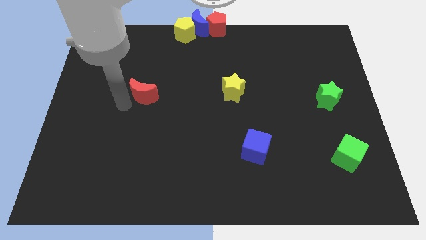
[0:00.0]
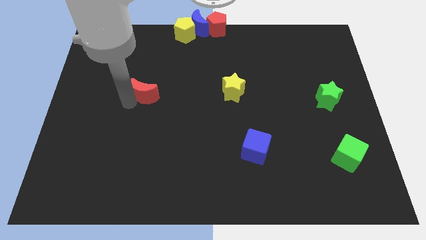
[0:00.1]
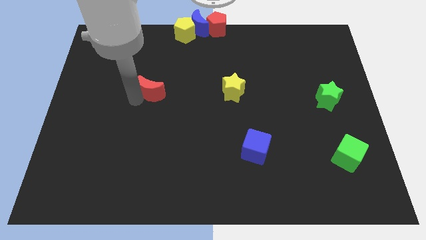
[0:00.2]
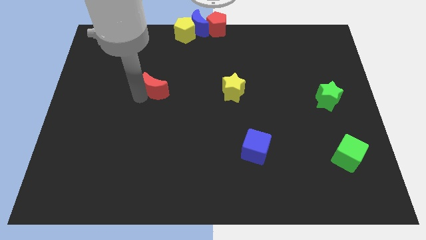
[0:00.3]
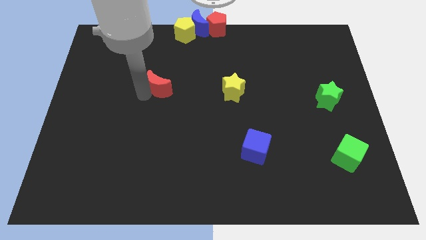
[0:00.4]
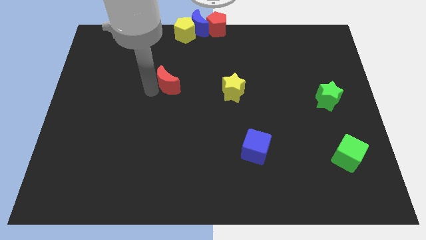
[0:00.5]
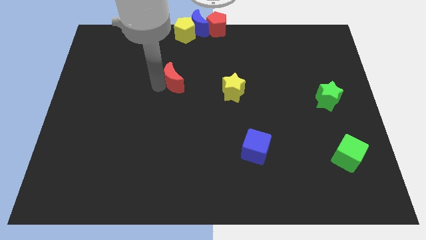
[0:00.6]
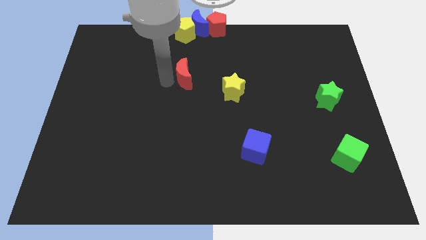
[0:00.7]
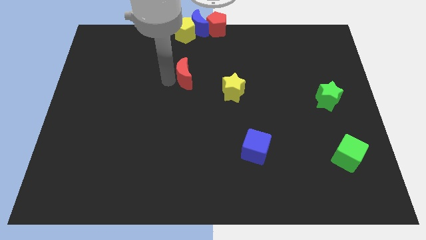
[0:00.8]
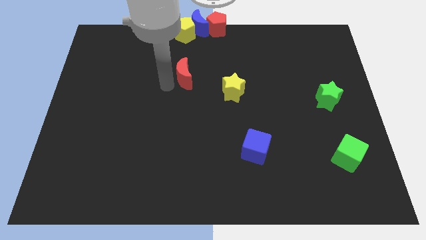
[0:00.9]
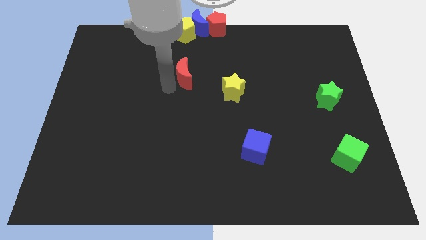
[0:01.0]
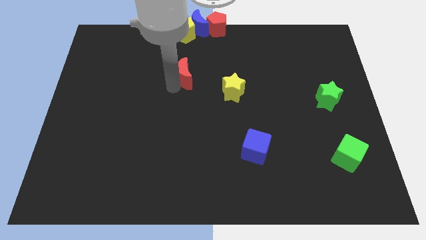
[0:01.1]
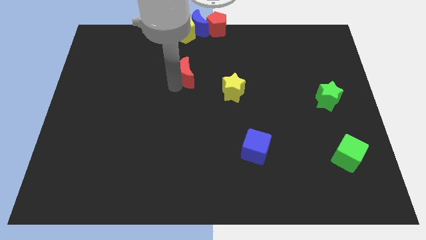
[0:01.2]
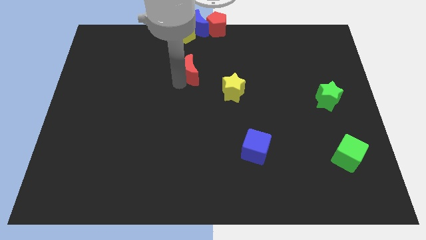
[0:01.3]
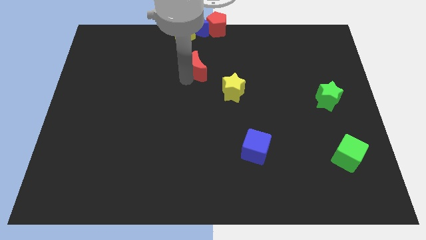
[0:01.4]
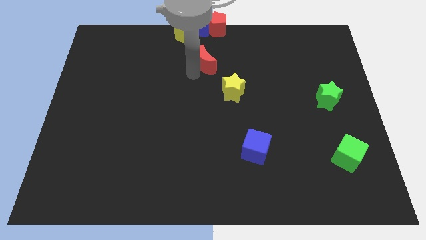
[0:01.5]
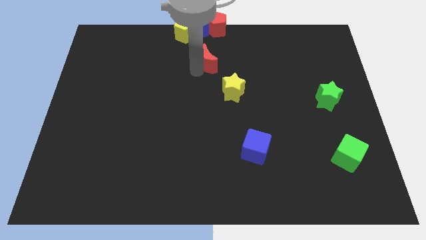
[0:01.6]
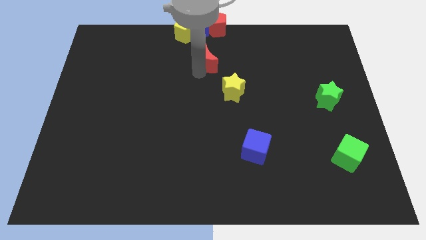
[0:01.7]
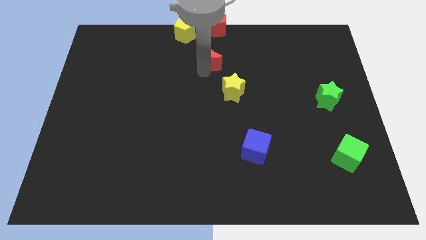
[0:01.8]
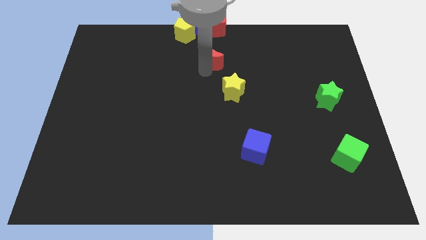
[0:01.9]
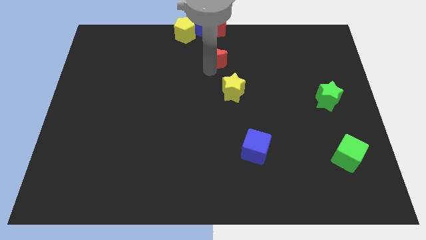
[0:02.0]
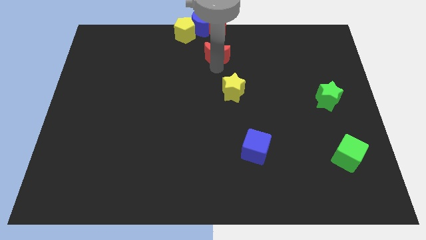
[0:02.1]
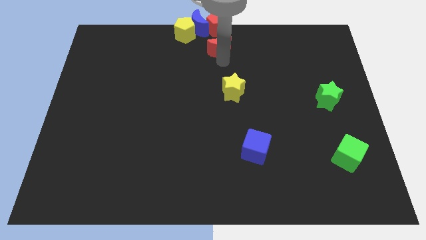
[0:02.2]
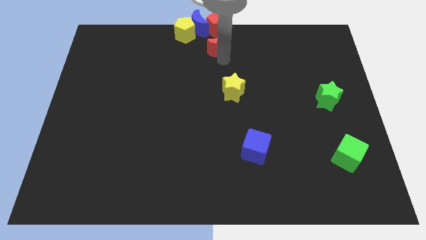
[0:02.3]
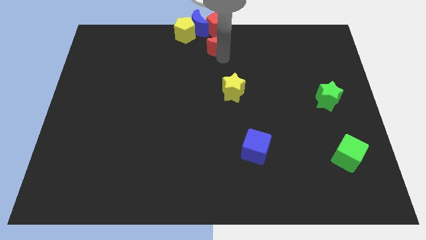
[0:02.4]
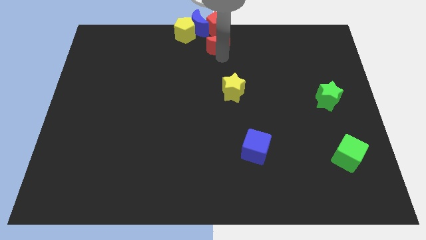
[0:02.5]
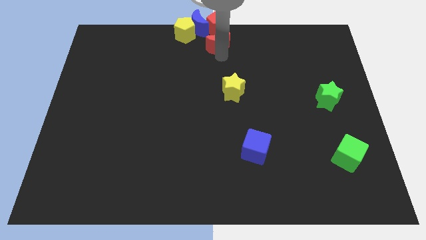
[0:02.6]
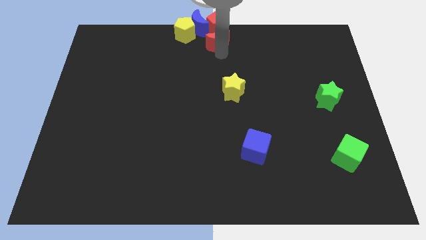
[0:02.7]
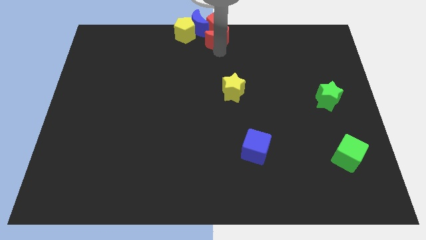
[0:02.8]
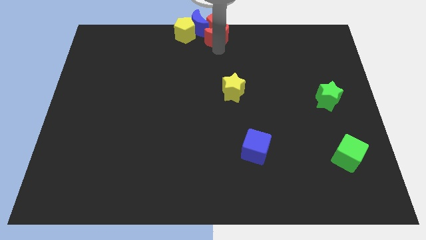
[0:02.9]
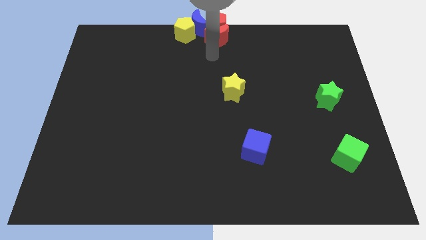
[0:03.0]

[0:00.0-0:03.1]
move red moon into the group of blocks

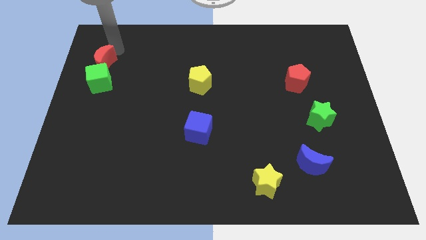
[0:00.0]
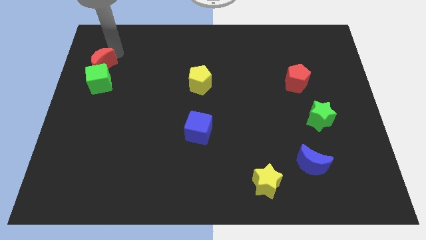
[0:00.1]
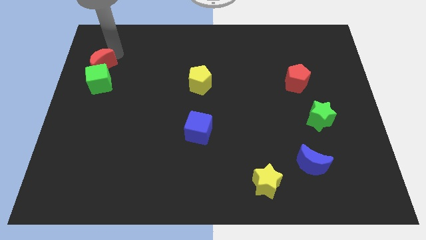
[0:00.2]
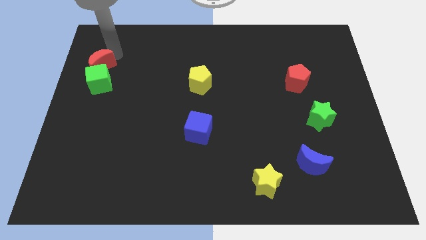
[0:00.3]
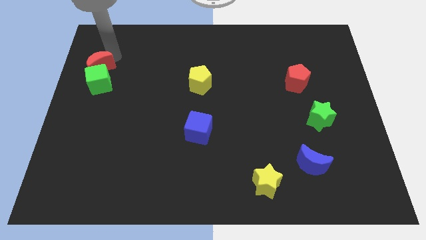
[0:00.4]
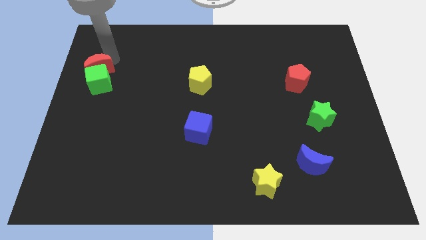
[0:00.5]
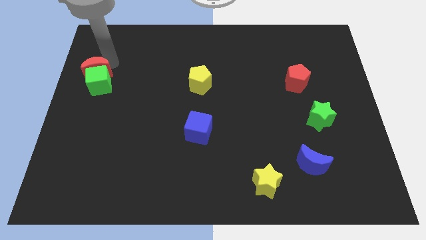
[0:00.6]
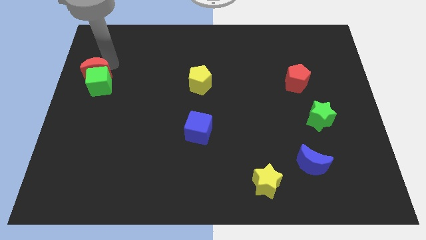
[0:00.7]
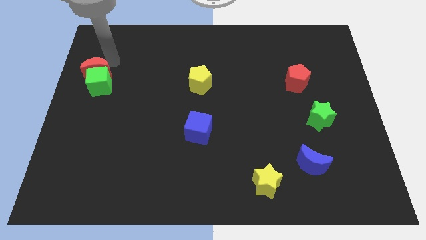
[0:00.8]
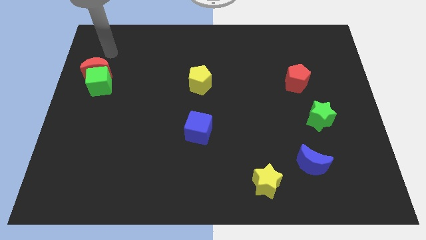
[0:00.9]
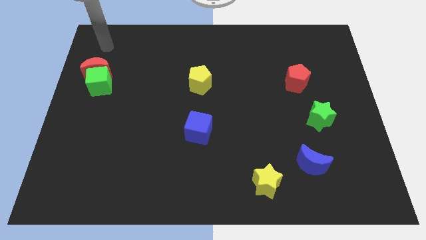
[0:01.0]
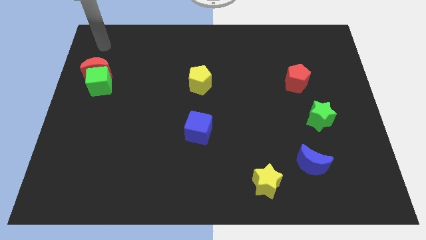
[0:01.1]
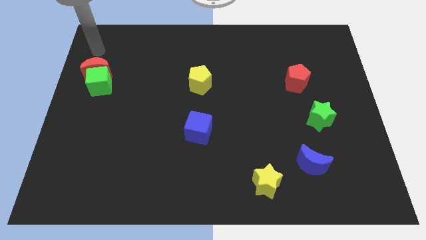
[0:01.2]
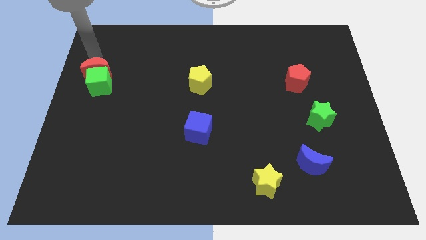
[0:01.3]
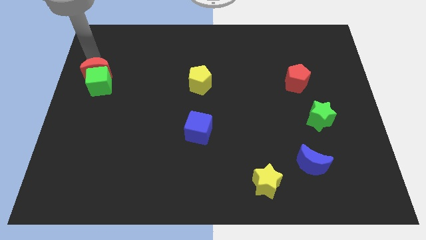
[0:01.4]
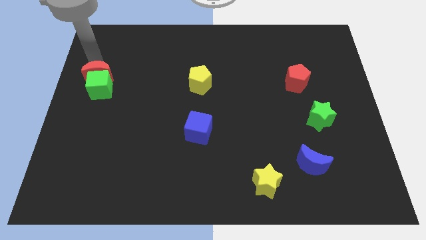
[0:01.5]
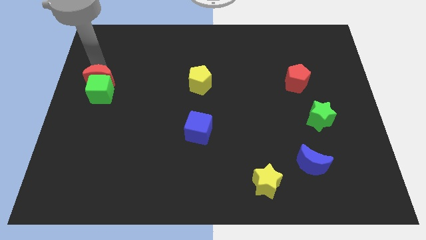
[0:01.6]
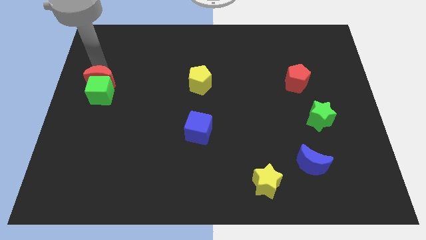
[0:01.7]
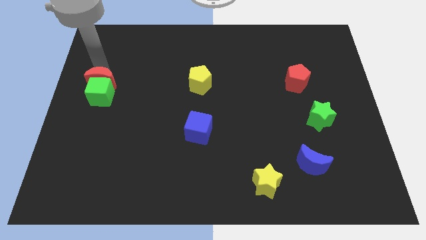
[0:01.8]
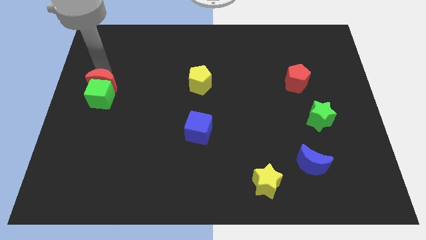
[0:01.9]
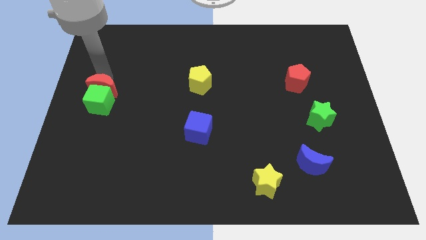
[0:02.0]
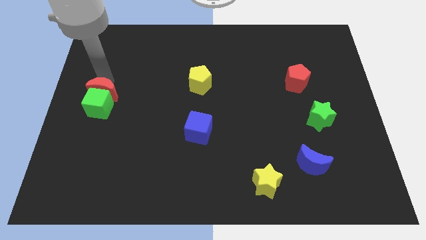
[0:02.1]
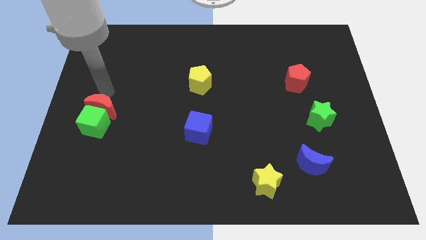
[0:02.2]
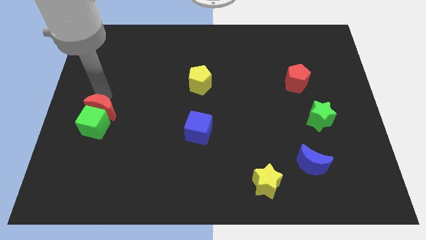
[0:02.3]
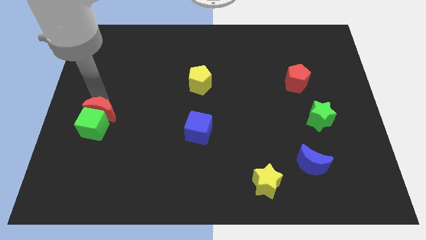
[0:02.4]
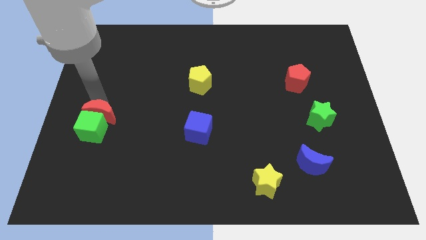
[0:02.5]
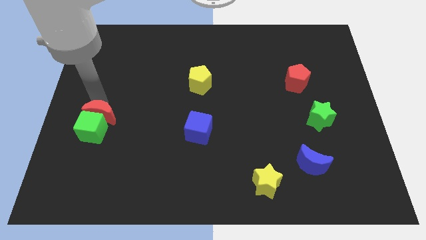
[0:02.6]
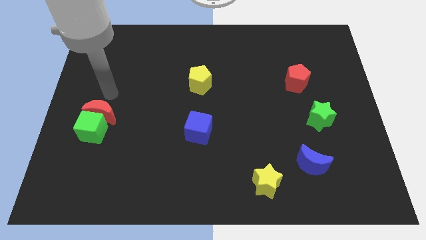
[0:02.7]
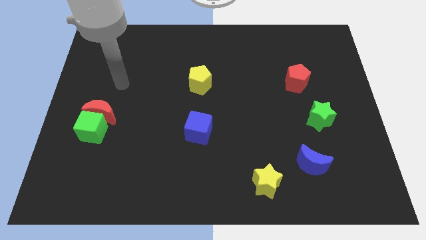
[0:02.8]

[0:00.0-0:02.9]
move the red crescent and green cube together to the left of the blue cube

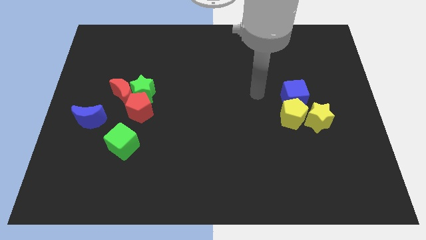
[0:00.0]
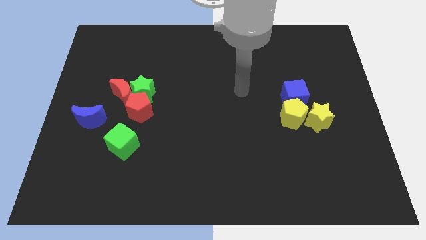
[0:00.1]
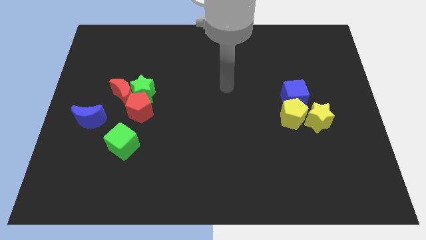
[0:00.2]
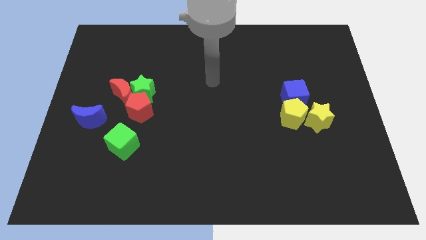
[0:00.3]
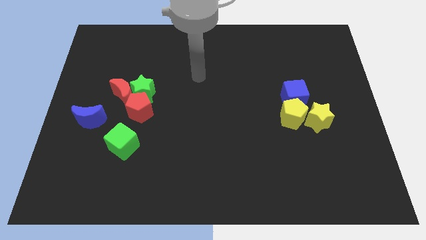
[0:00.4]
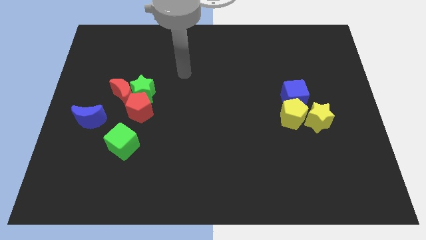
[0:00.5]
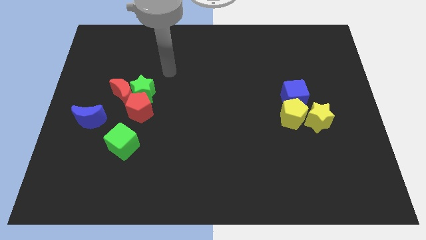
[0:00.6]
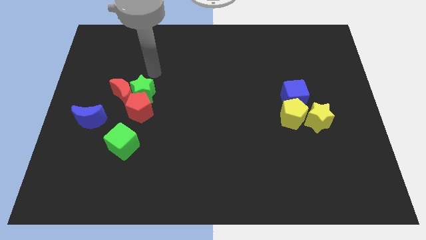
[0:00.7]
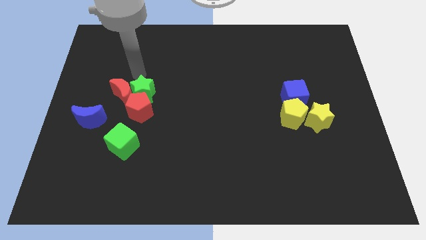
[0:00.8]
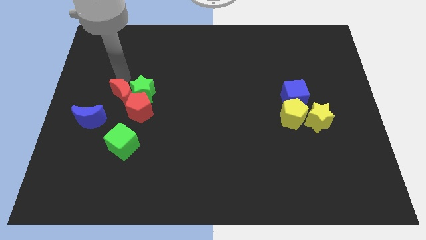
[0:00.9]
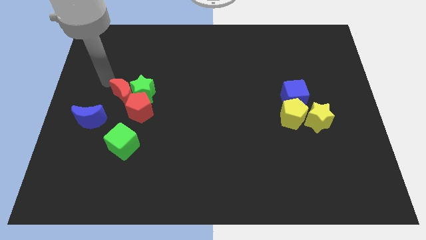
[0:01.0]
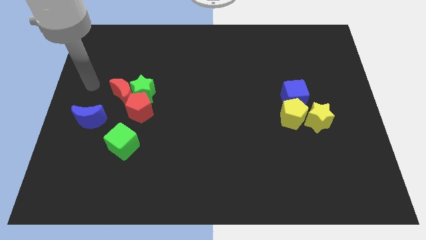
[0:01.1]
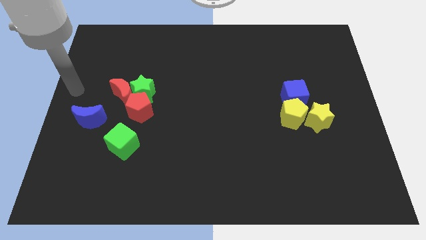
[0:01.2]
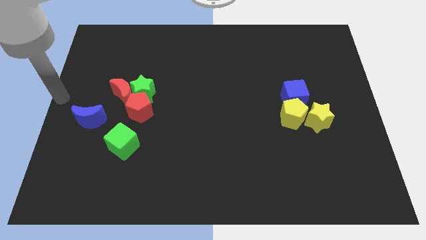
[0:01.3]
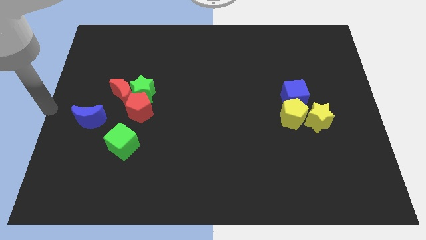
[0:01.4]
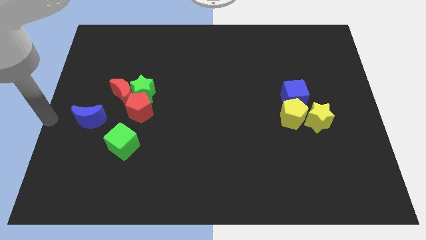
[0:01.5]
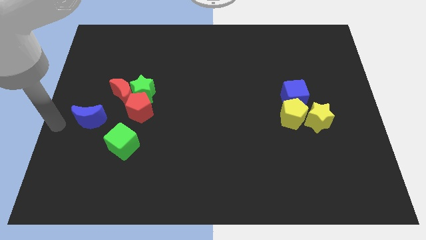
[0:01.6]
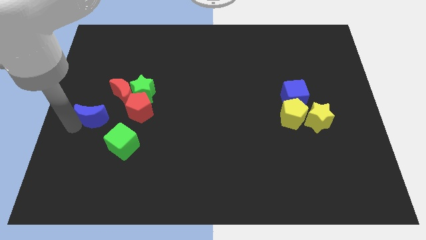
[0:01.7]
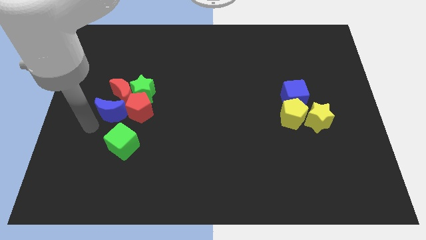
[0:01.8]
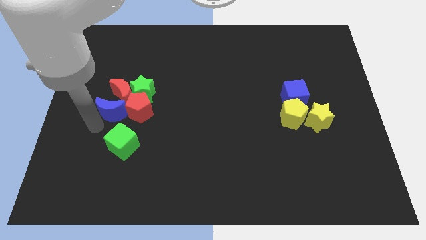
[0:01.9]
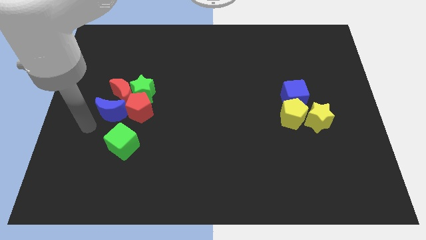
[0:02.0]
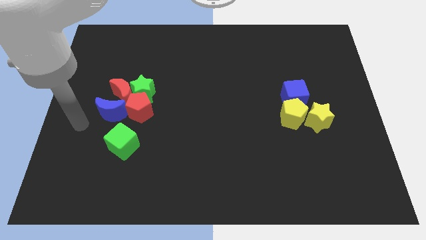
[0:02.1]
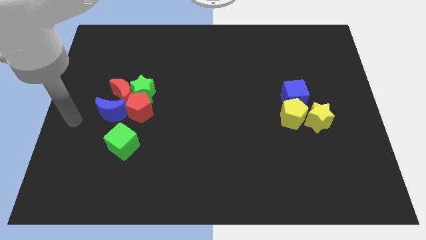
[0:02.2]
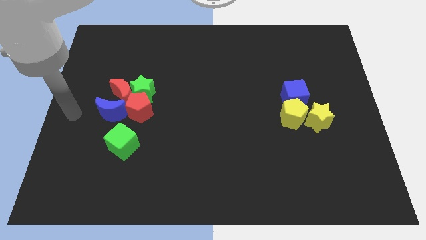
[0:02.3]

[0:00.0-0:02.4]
place the blue moon to the left of the red pentagon

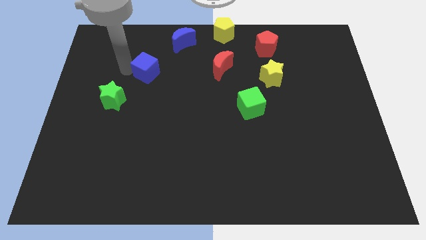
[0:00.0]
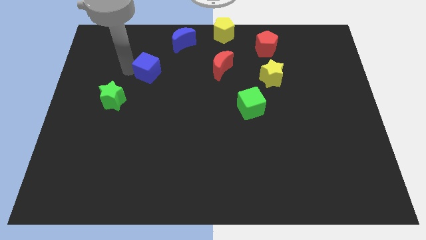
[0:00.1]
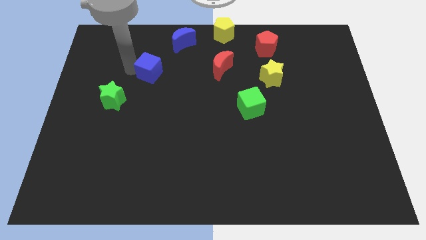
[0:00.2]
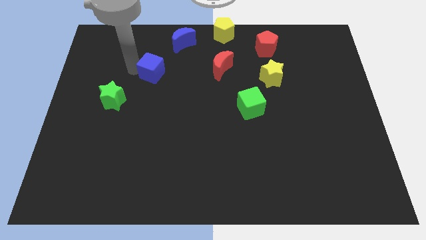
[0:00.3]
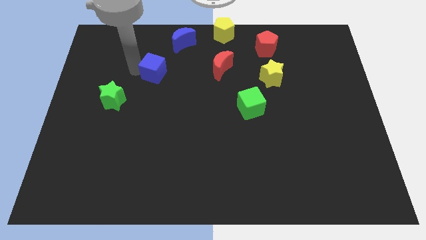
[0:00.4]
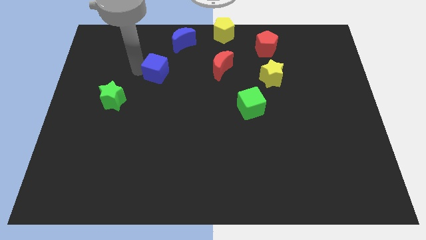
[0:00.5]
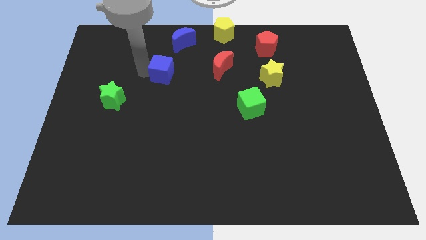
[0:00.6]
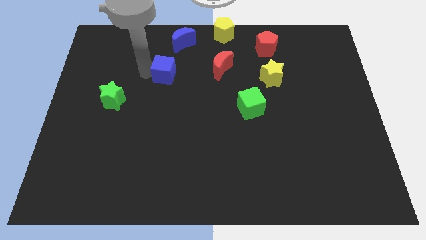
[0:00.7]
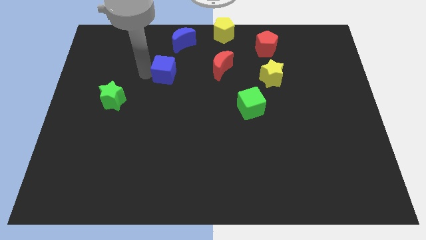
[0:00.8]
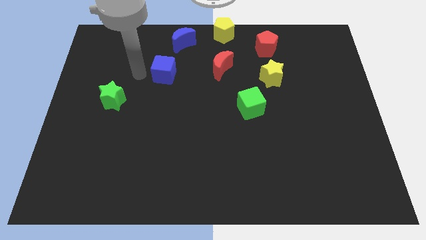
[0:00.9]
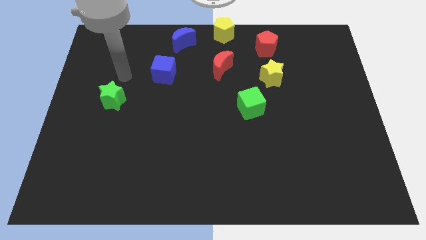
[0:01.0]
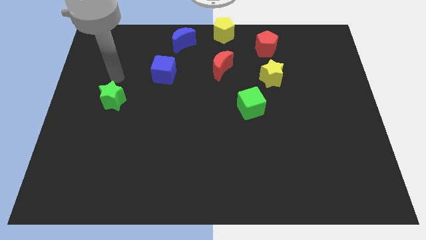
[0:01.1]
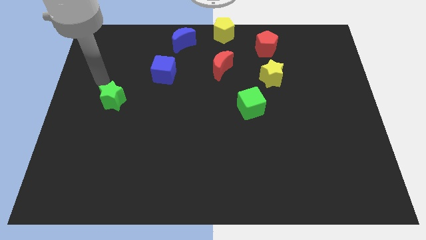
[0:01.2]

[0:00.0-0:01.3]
push the blue cube to the left of the red crescent
